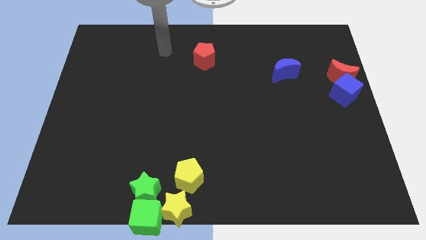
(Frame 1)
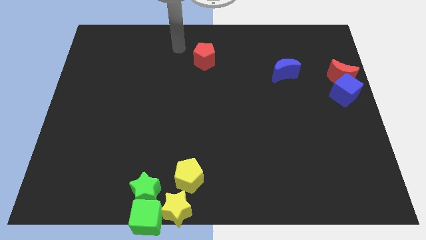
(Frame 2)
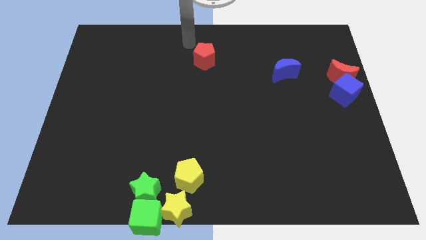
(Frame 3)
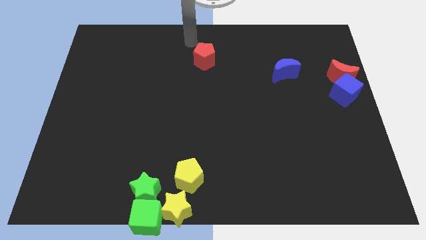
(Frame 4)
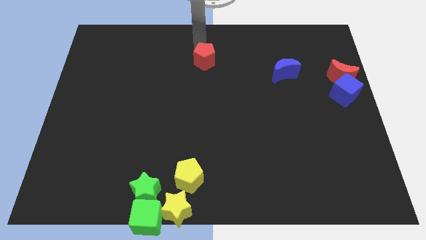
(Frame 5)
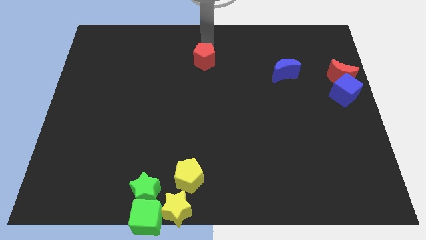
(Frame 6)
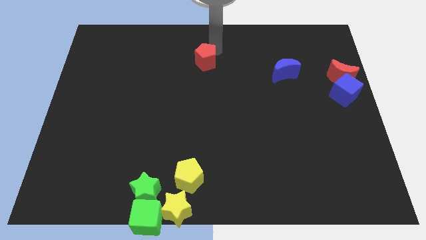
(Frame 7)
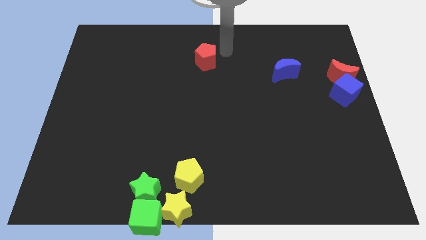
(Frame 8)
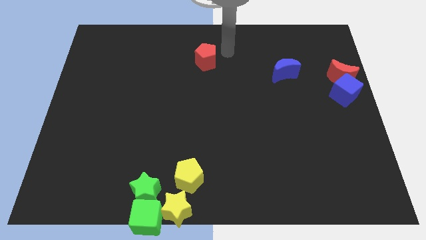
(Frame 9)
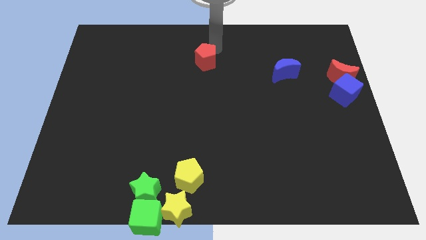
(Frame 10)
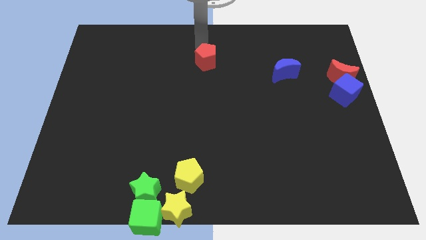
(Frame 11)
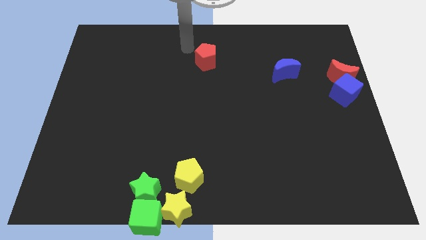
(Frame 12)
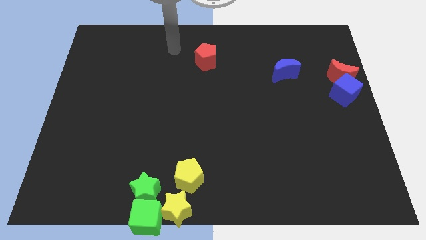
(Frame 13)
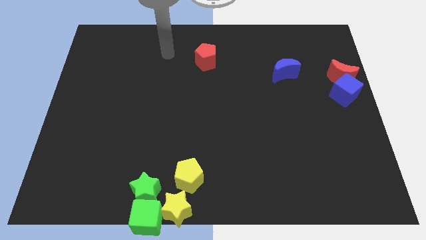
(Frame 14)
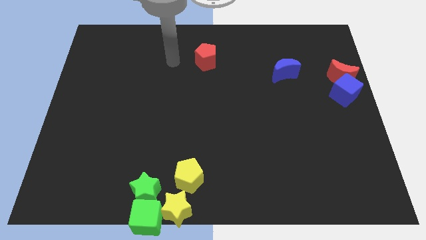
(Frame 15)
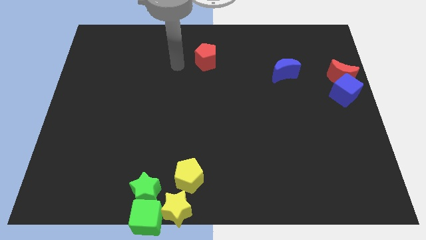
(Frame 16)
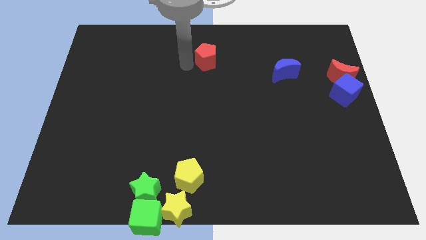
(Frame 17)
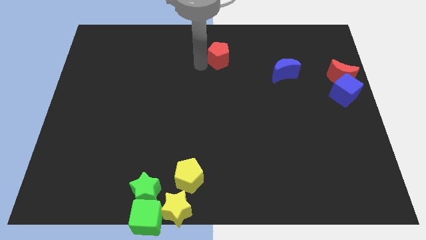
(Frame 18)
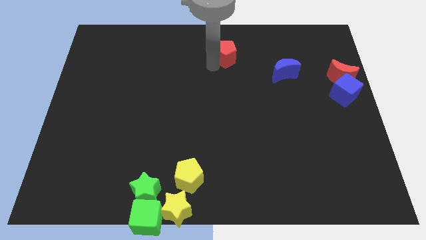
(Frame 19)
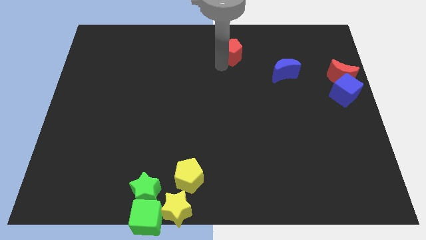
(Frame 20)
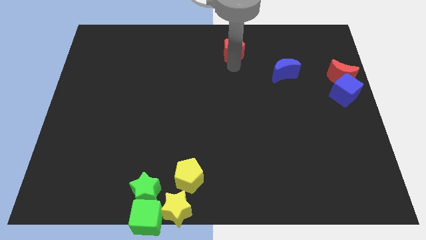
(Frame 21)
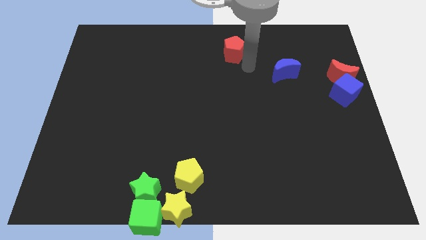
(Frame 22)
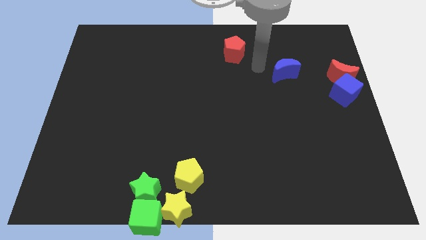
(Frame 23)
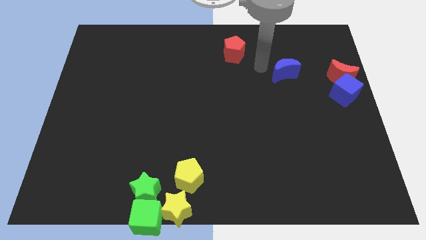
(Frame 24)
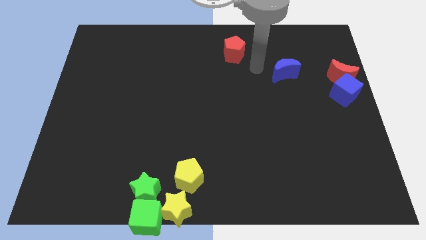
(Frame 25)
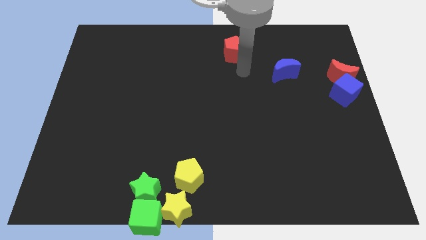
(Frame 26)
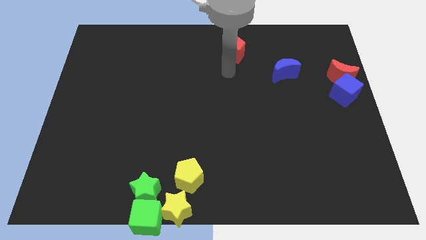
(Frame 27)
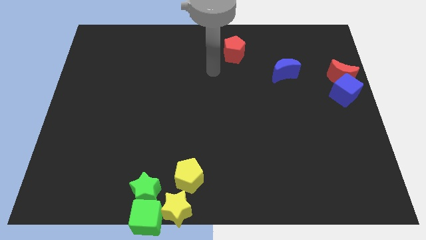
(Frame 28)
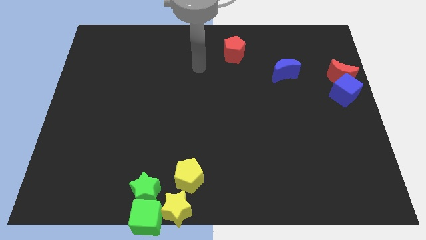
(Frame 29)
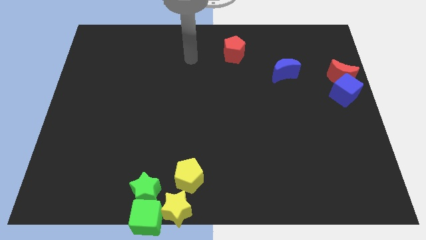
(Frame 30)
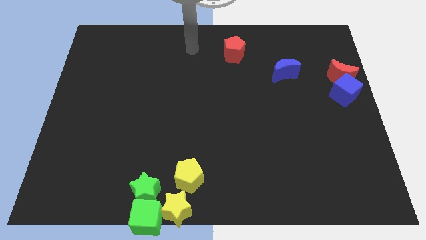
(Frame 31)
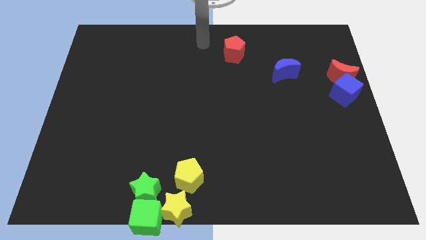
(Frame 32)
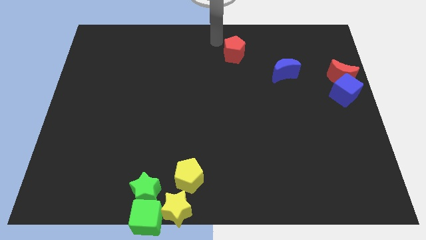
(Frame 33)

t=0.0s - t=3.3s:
move the red pentagon diagonally left to the blue crescent

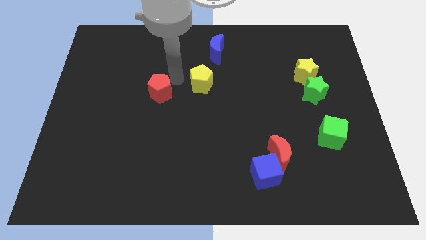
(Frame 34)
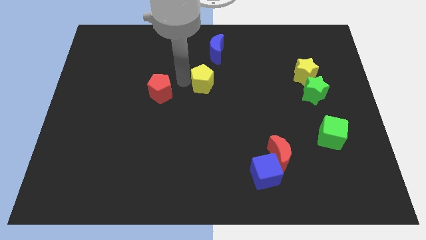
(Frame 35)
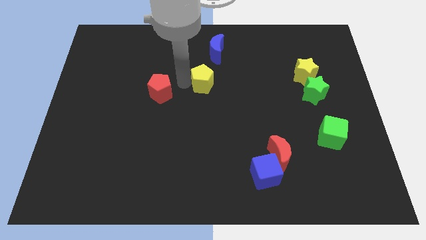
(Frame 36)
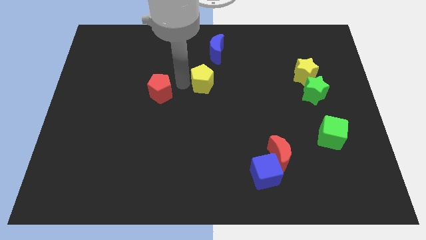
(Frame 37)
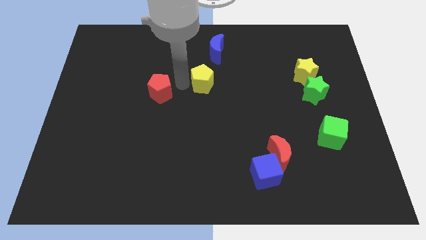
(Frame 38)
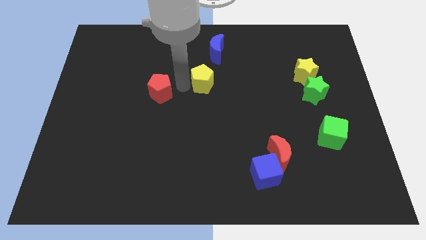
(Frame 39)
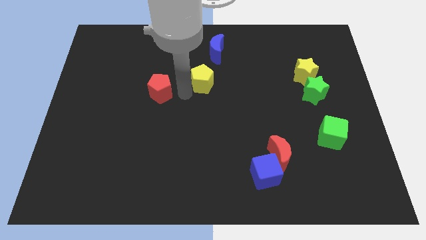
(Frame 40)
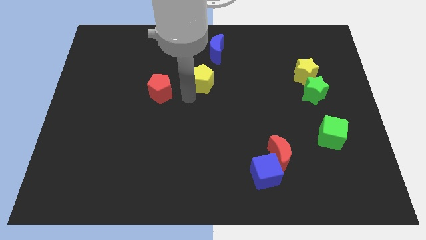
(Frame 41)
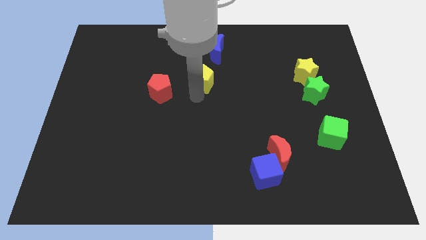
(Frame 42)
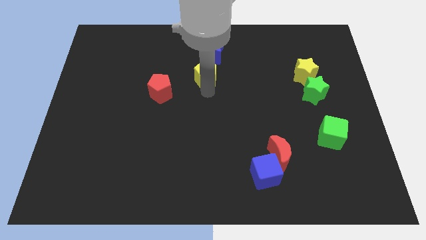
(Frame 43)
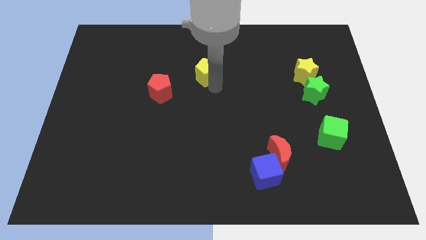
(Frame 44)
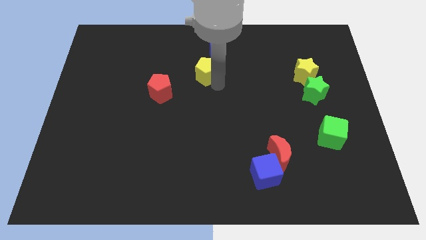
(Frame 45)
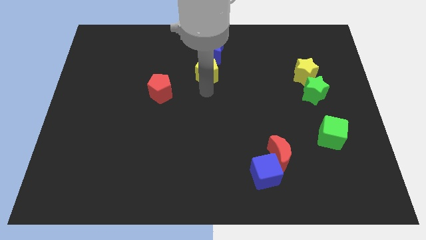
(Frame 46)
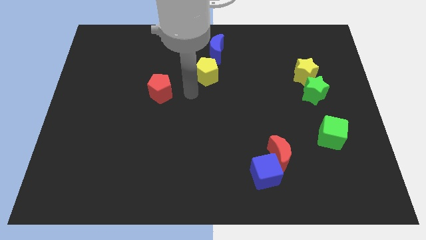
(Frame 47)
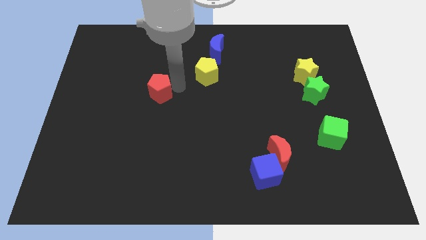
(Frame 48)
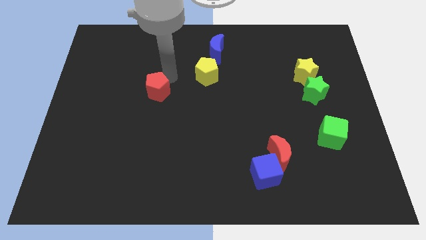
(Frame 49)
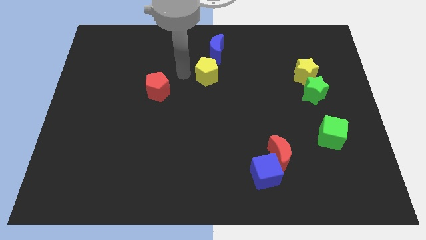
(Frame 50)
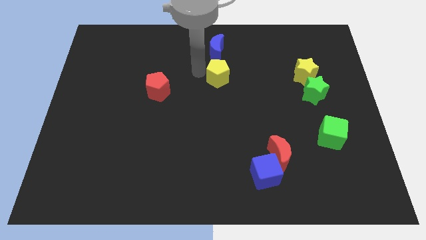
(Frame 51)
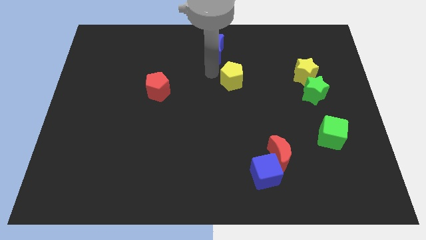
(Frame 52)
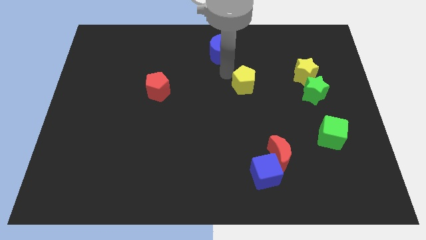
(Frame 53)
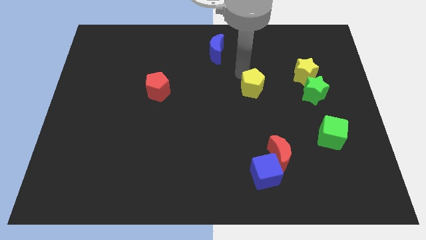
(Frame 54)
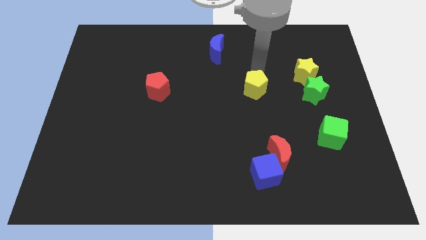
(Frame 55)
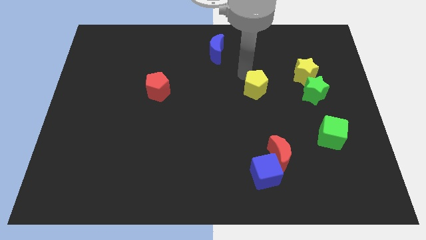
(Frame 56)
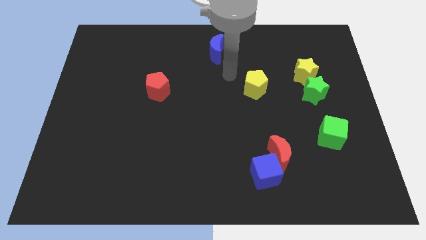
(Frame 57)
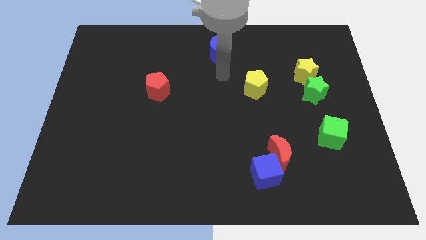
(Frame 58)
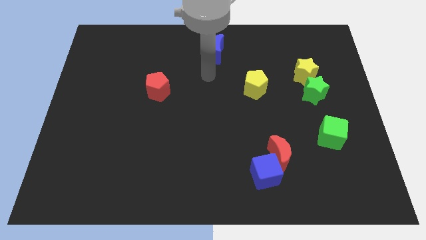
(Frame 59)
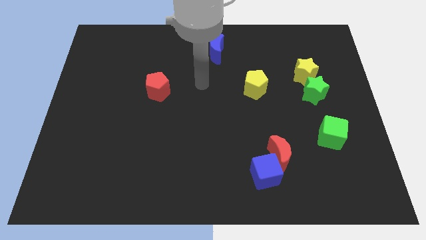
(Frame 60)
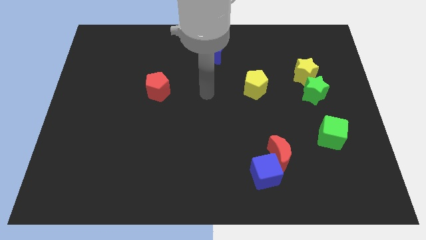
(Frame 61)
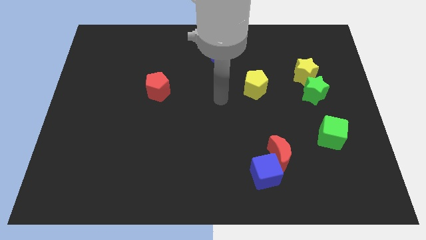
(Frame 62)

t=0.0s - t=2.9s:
place the yellow pentagon left to the green star

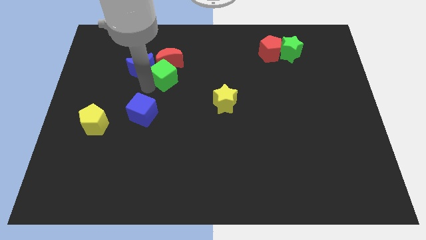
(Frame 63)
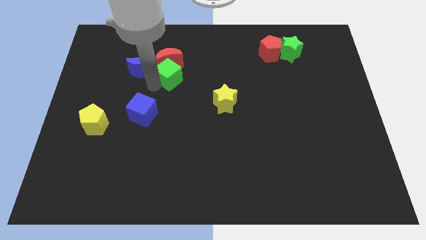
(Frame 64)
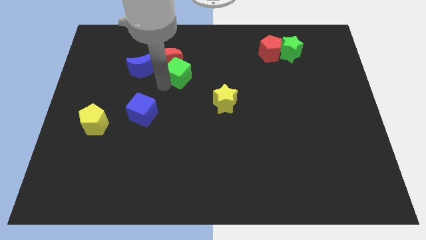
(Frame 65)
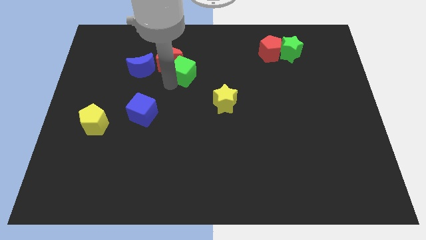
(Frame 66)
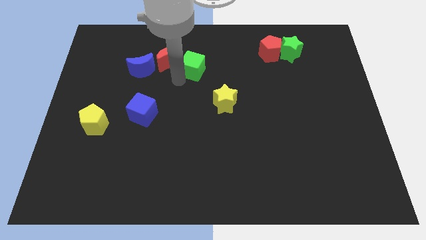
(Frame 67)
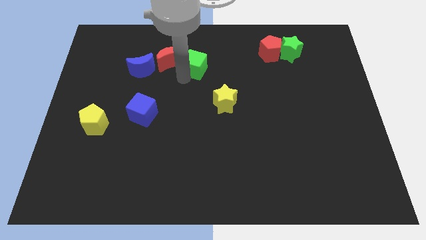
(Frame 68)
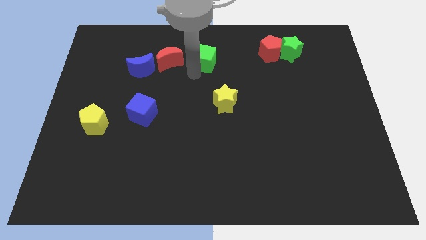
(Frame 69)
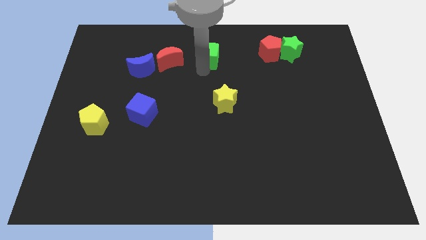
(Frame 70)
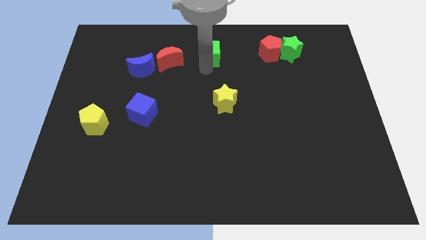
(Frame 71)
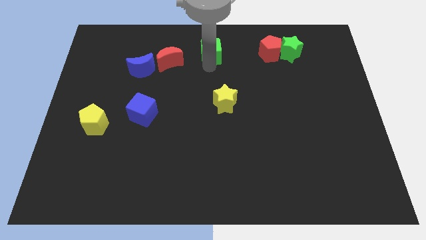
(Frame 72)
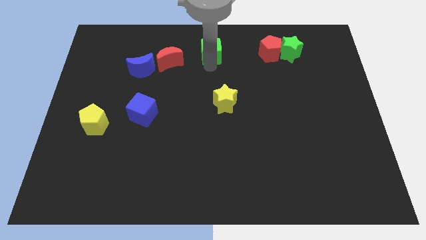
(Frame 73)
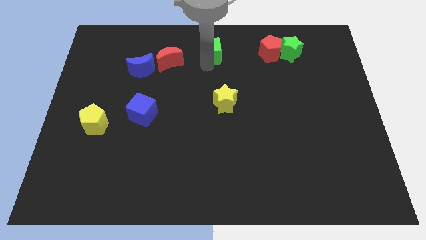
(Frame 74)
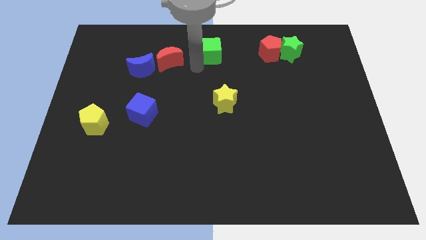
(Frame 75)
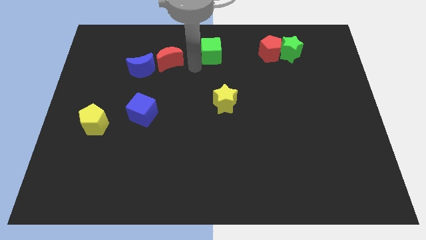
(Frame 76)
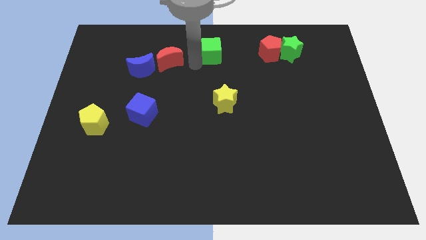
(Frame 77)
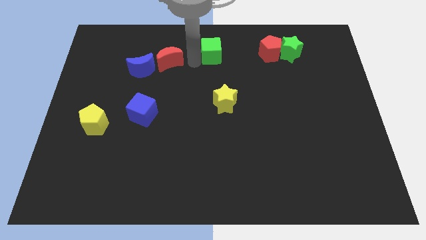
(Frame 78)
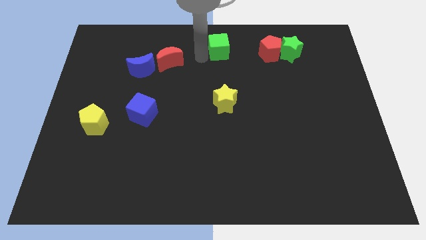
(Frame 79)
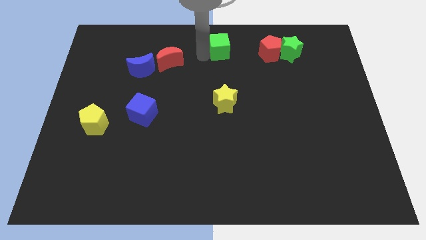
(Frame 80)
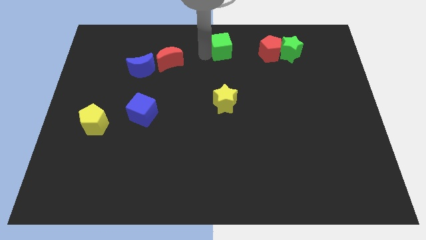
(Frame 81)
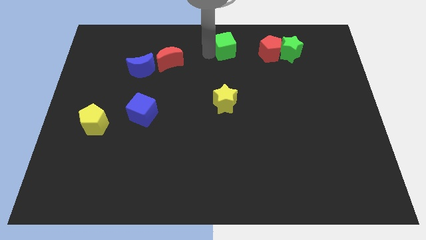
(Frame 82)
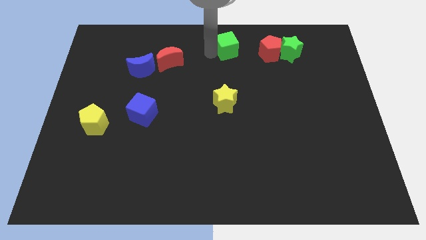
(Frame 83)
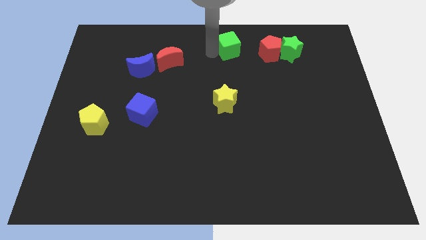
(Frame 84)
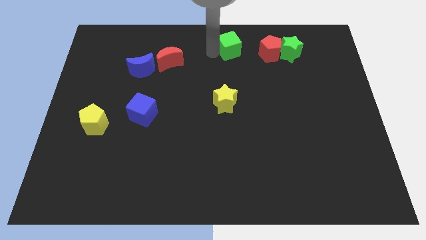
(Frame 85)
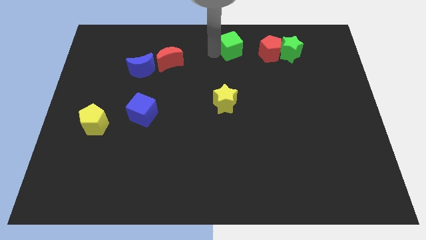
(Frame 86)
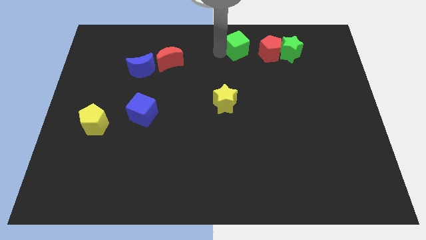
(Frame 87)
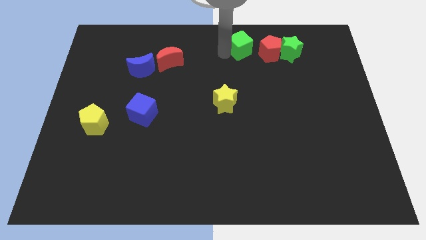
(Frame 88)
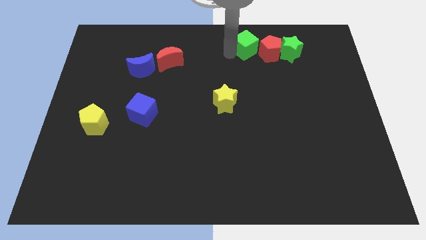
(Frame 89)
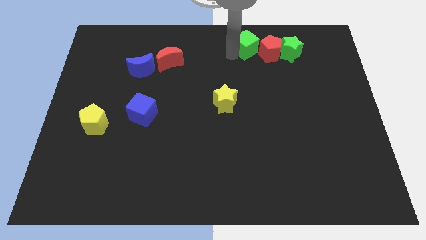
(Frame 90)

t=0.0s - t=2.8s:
separate red moon and green cube
